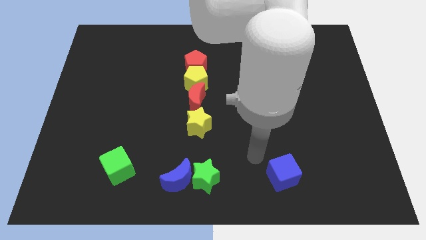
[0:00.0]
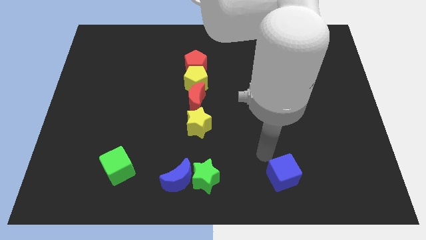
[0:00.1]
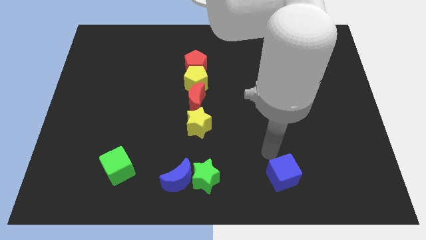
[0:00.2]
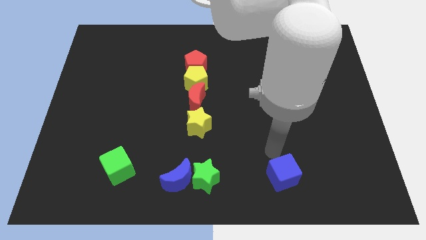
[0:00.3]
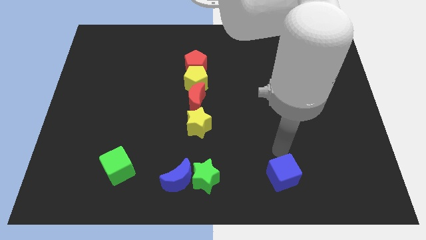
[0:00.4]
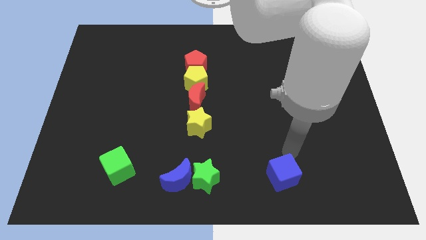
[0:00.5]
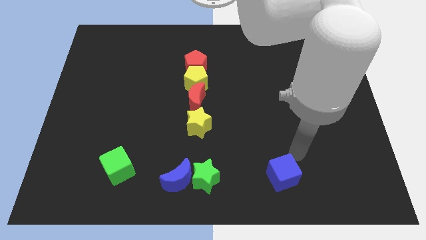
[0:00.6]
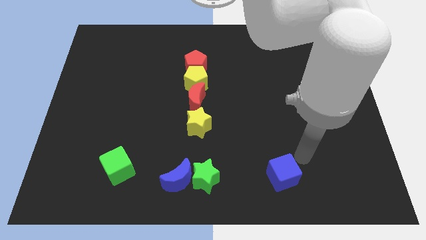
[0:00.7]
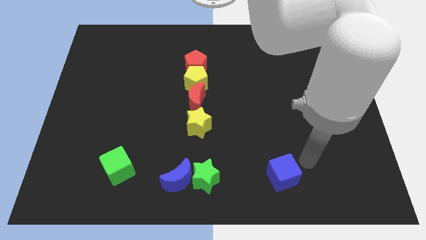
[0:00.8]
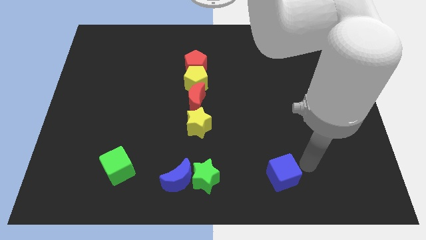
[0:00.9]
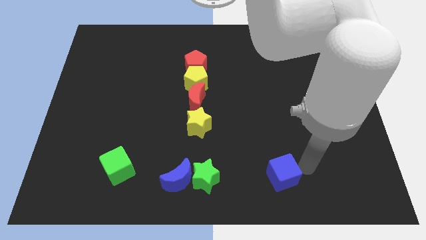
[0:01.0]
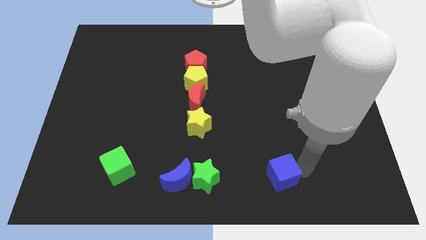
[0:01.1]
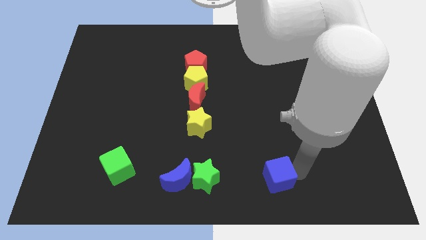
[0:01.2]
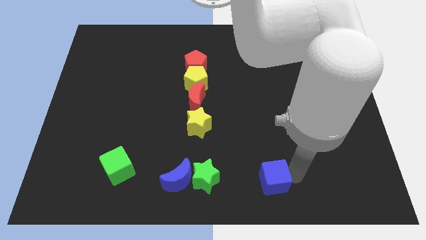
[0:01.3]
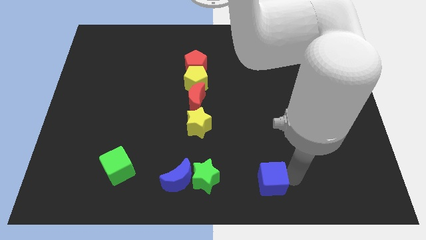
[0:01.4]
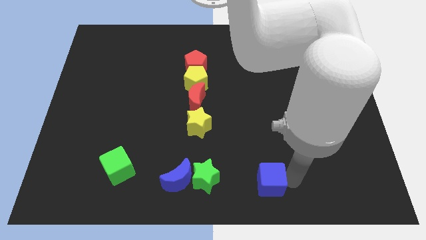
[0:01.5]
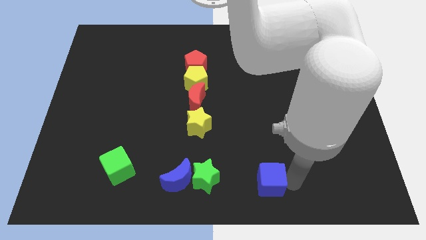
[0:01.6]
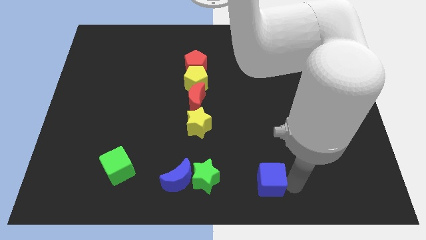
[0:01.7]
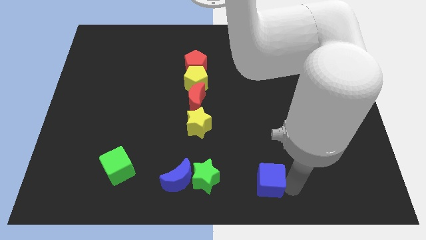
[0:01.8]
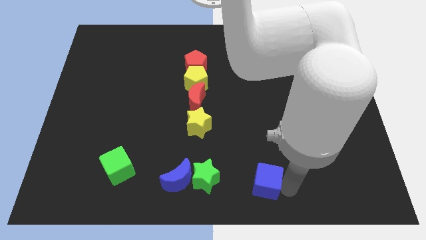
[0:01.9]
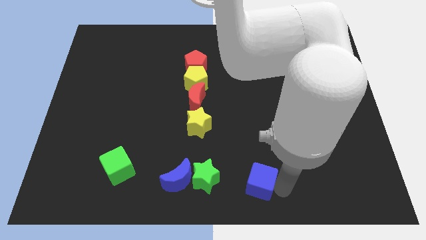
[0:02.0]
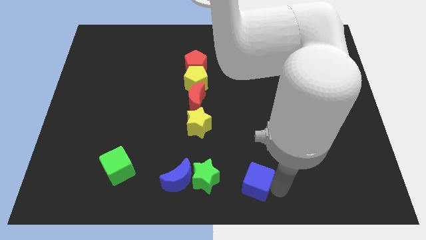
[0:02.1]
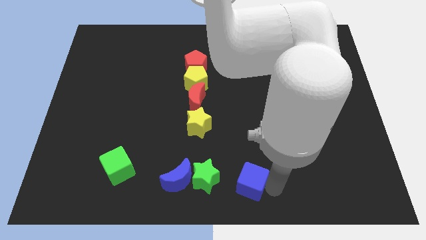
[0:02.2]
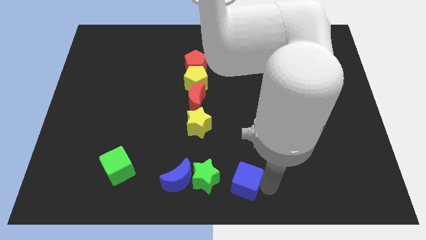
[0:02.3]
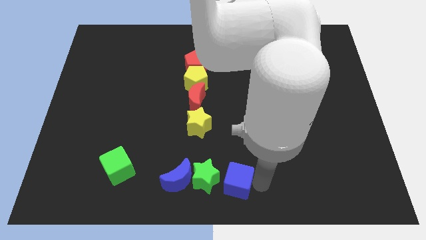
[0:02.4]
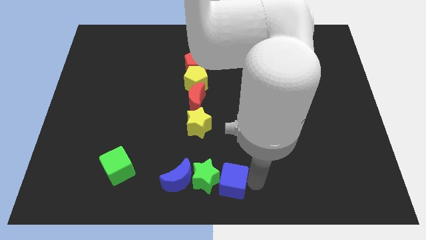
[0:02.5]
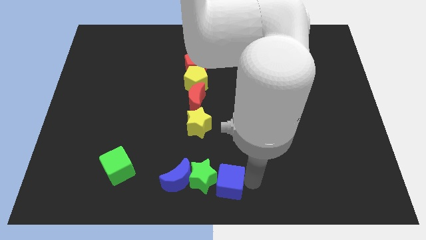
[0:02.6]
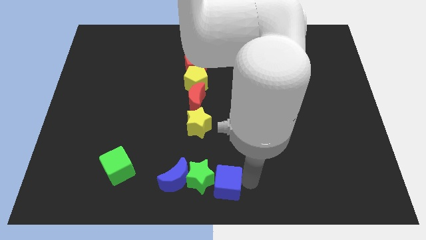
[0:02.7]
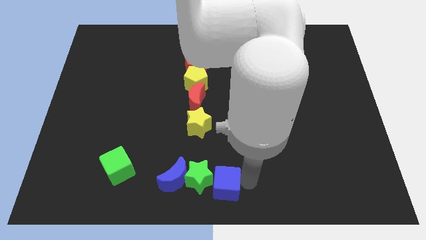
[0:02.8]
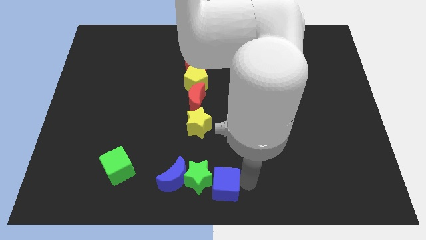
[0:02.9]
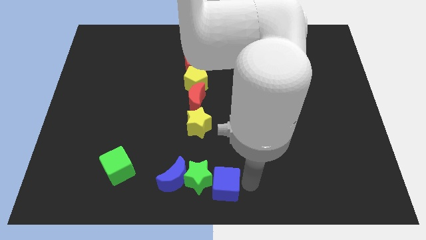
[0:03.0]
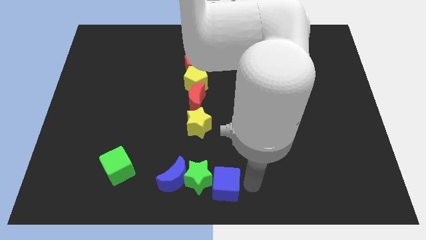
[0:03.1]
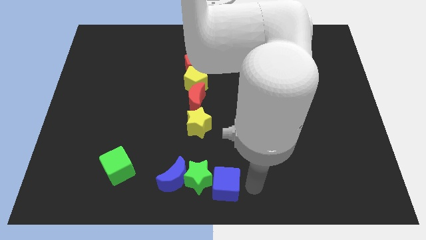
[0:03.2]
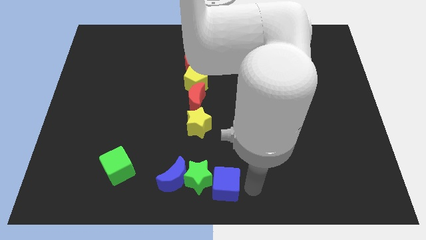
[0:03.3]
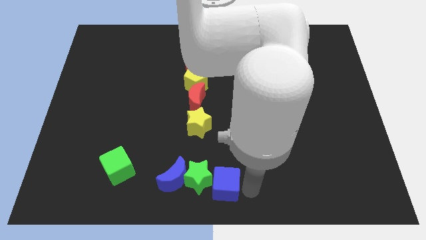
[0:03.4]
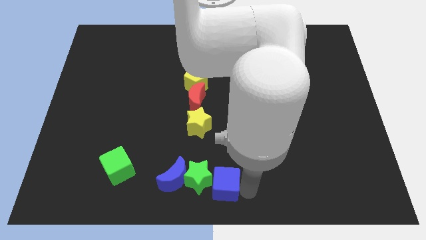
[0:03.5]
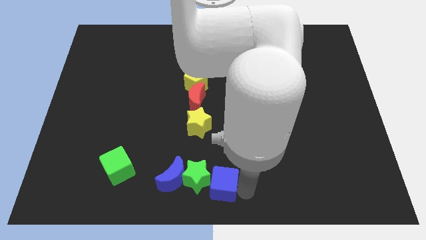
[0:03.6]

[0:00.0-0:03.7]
push the blue cube close to the green star

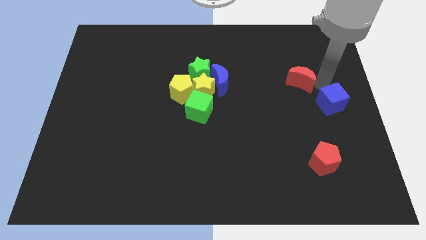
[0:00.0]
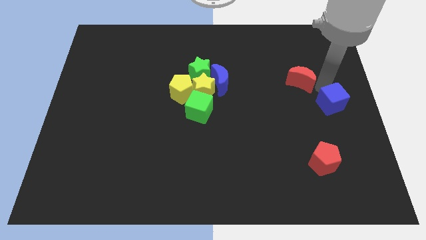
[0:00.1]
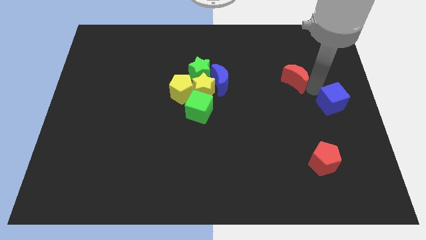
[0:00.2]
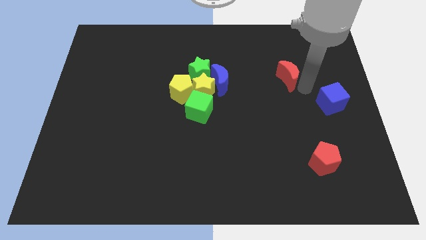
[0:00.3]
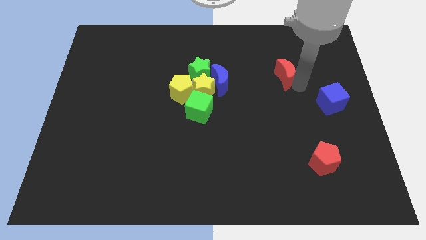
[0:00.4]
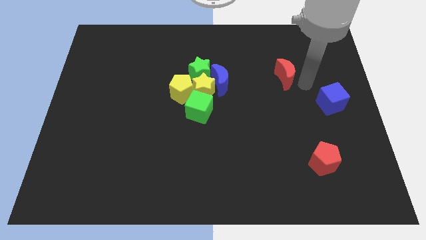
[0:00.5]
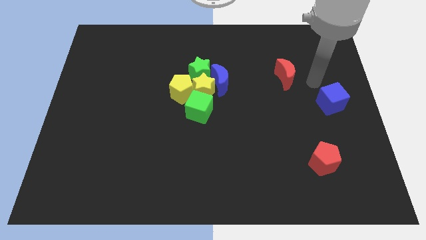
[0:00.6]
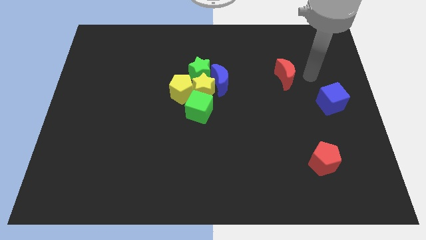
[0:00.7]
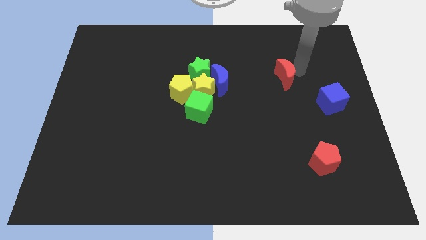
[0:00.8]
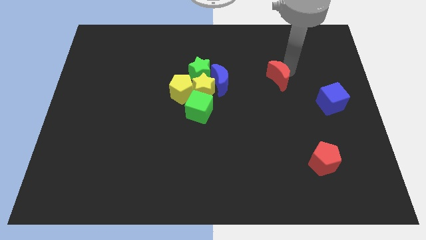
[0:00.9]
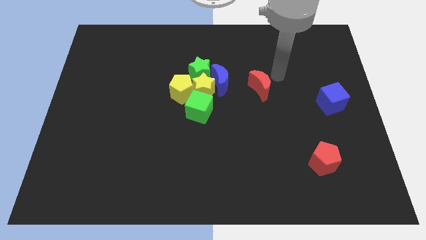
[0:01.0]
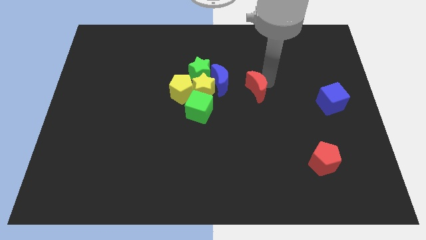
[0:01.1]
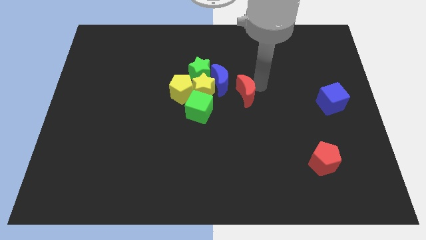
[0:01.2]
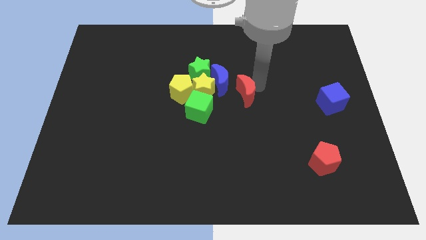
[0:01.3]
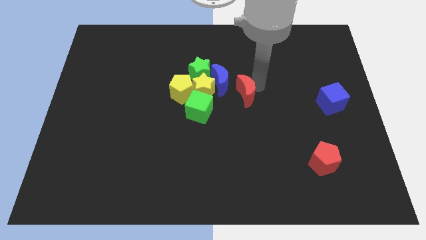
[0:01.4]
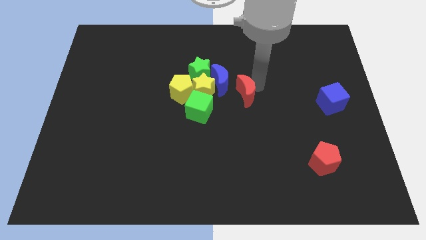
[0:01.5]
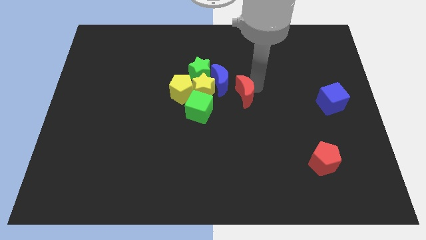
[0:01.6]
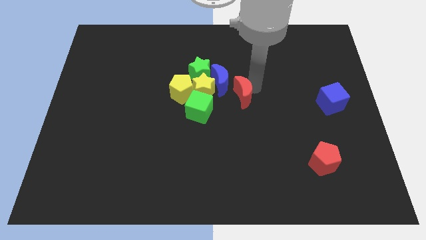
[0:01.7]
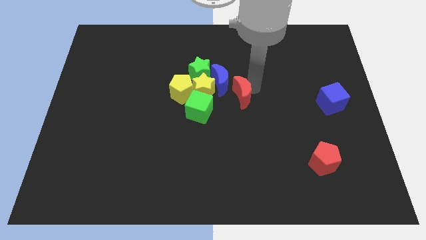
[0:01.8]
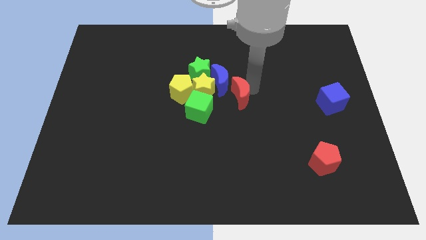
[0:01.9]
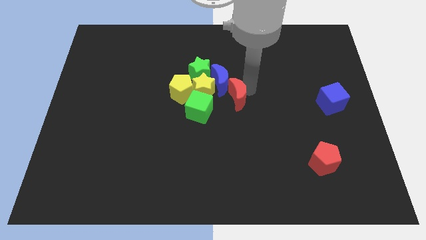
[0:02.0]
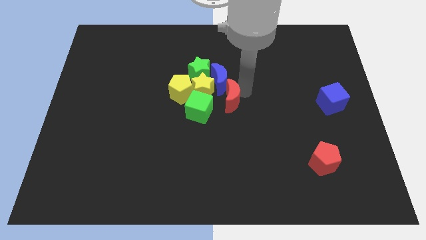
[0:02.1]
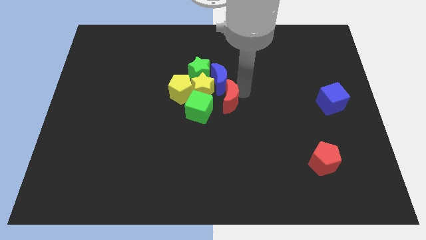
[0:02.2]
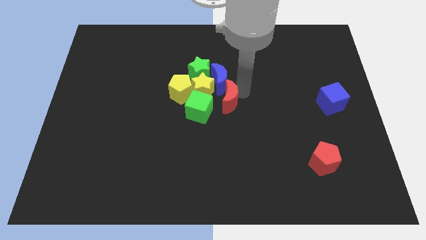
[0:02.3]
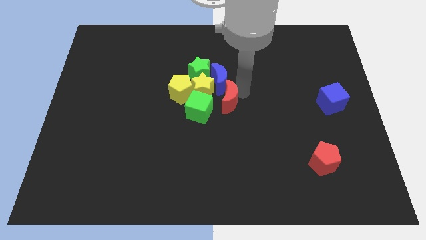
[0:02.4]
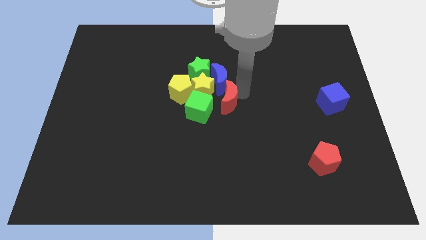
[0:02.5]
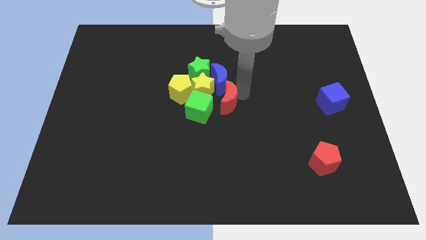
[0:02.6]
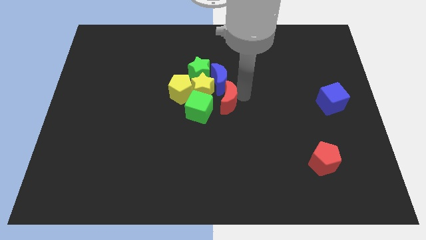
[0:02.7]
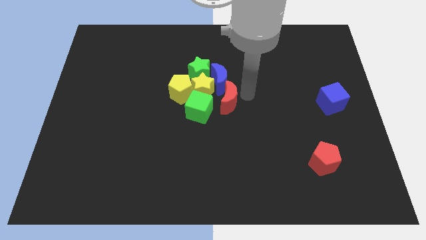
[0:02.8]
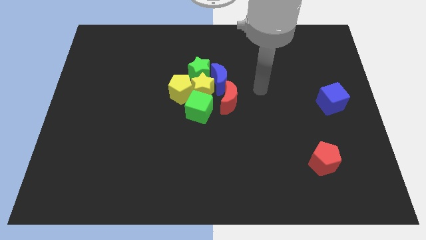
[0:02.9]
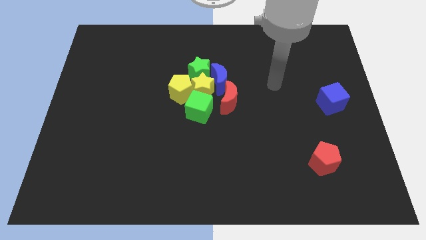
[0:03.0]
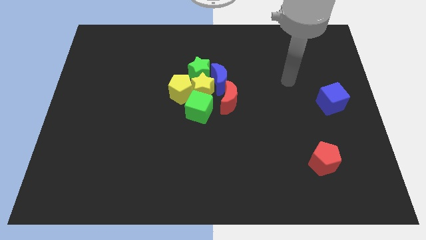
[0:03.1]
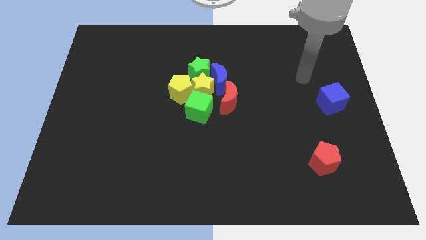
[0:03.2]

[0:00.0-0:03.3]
push red moon into group of blocks

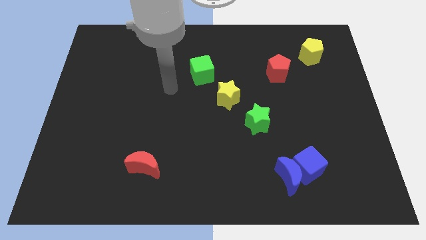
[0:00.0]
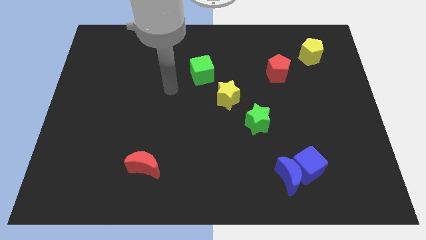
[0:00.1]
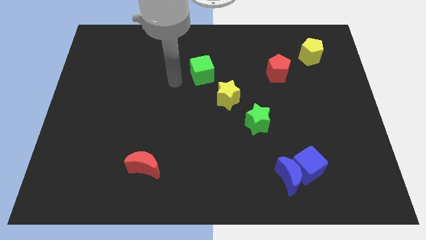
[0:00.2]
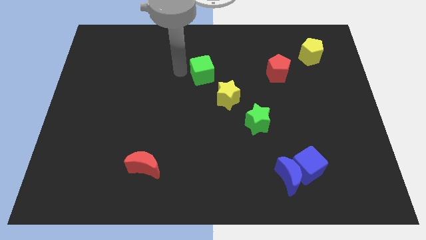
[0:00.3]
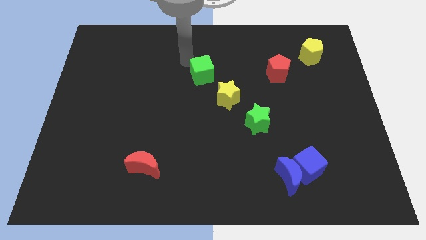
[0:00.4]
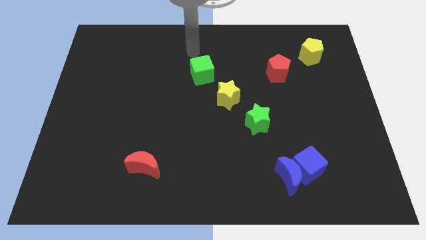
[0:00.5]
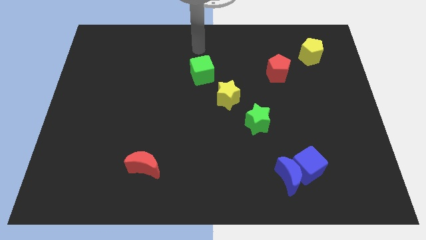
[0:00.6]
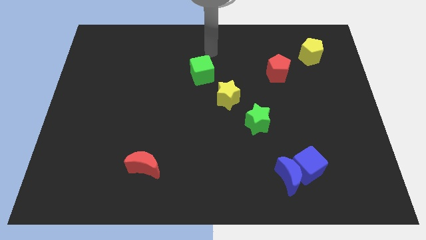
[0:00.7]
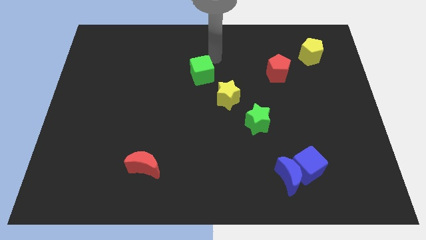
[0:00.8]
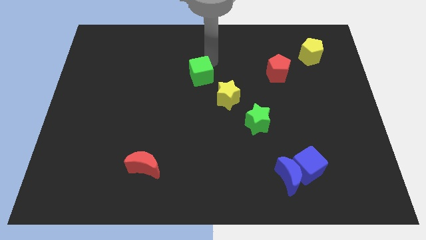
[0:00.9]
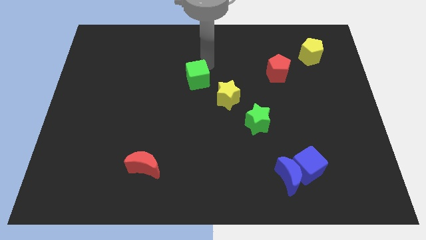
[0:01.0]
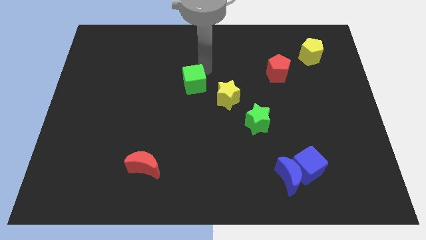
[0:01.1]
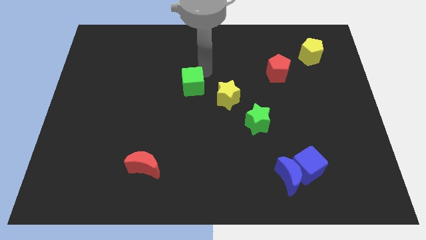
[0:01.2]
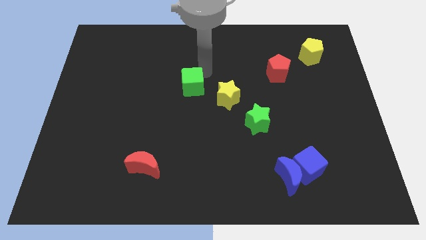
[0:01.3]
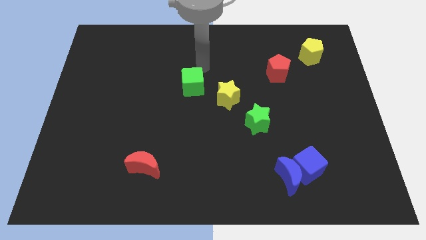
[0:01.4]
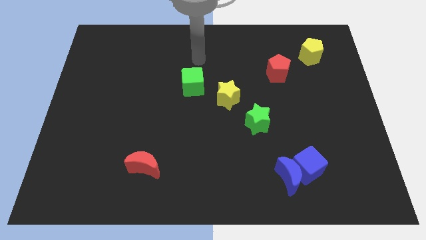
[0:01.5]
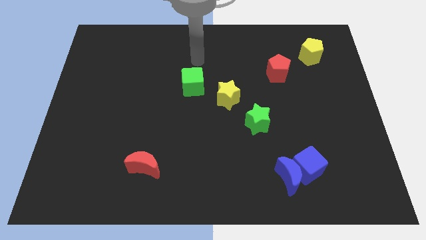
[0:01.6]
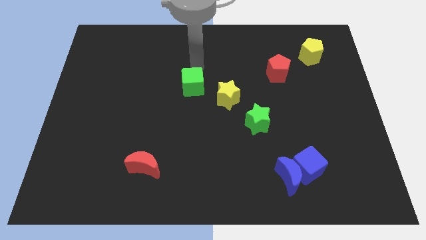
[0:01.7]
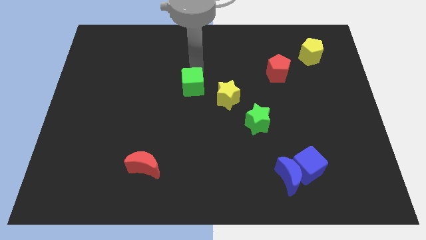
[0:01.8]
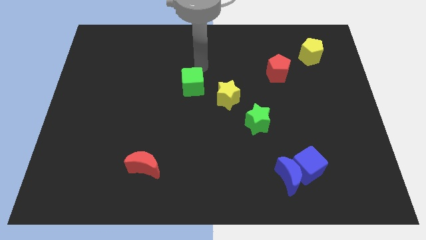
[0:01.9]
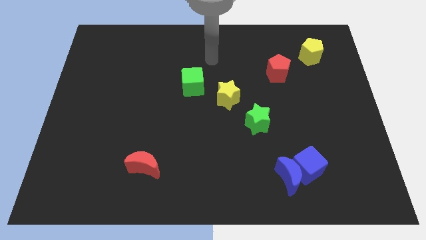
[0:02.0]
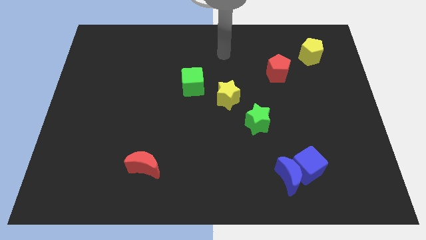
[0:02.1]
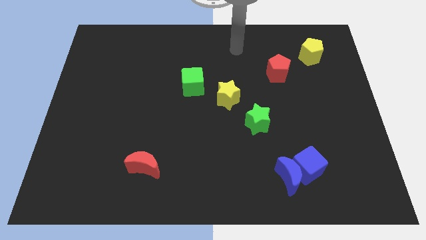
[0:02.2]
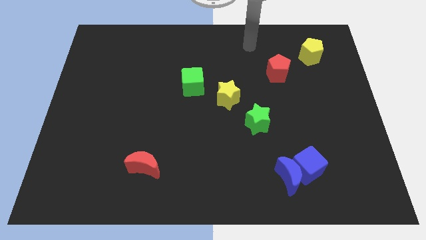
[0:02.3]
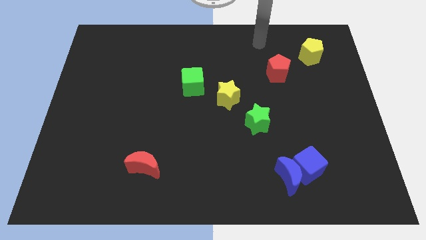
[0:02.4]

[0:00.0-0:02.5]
drag the green cube diagonally to red moon
